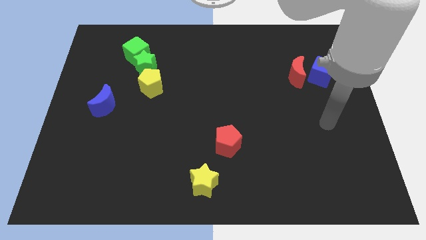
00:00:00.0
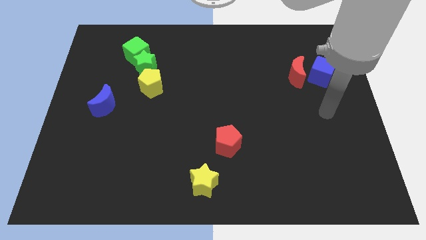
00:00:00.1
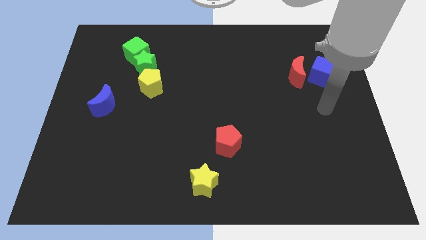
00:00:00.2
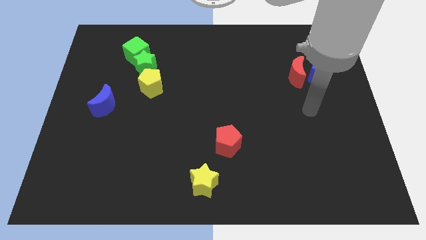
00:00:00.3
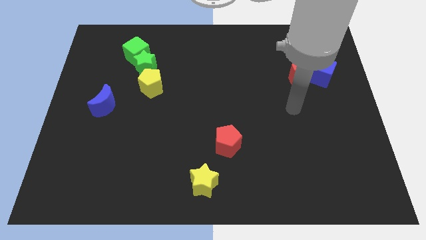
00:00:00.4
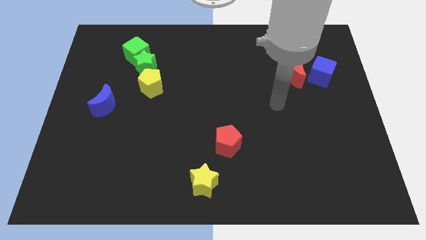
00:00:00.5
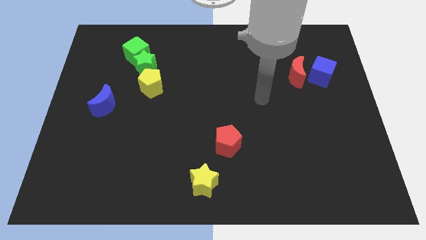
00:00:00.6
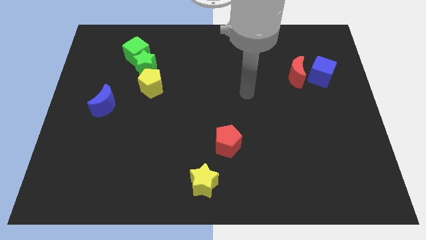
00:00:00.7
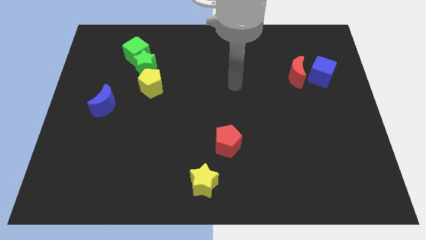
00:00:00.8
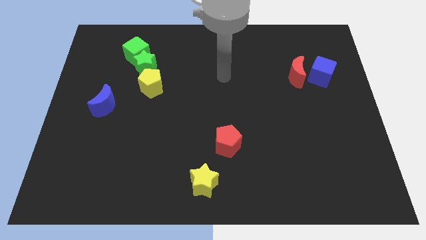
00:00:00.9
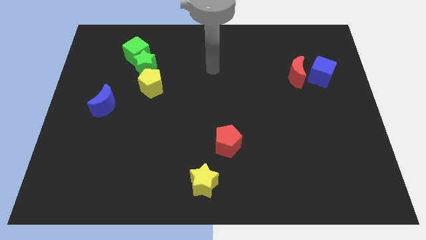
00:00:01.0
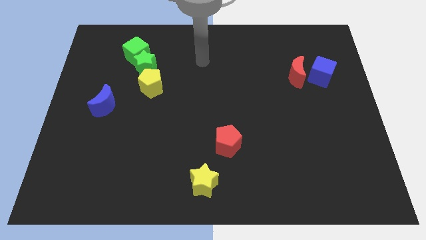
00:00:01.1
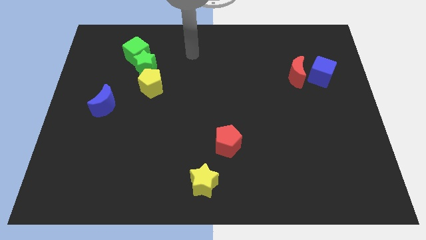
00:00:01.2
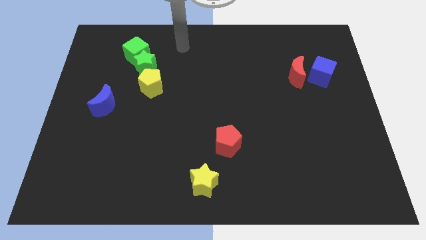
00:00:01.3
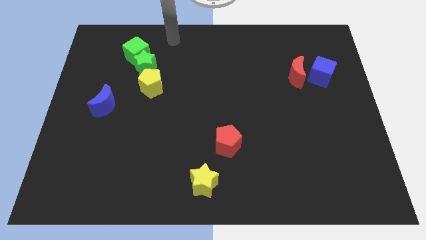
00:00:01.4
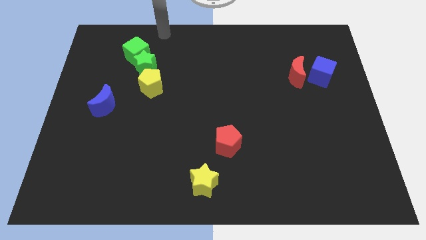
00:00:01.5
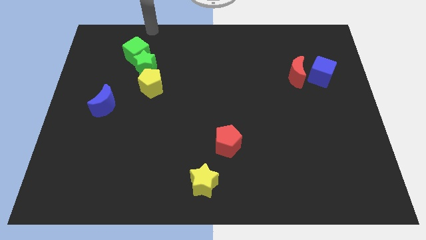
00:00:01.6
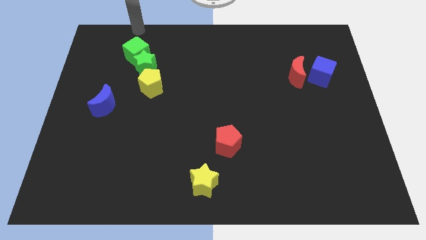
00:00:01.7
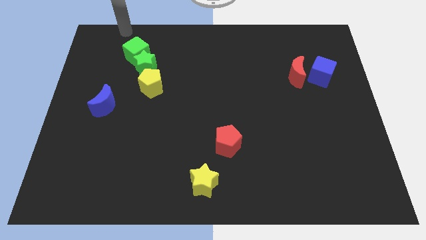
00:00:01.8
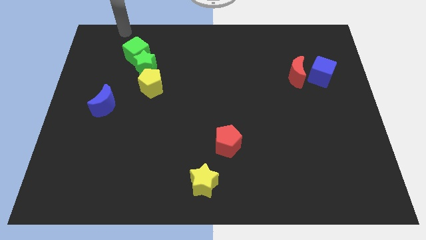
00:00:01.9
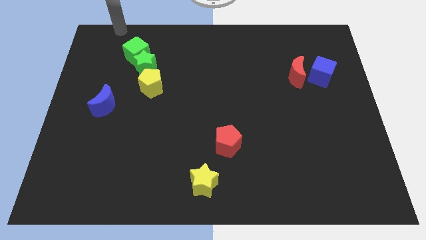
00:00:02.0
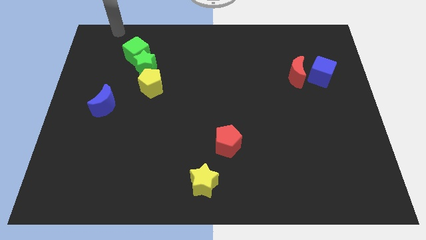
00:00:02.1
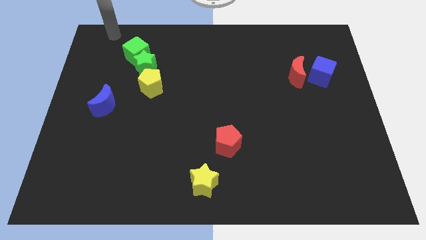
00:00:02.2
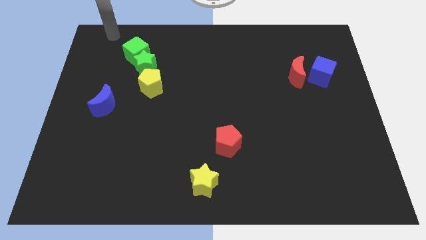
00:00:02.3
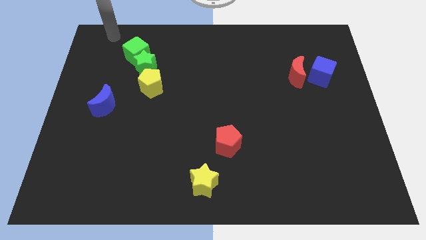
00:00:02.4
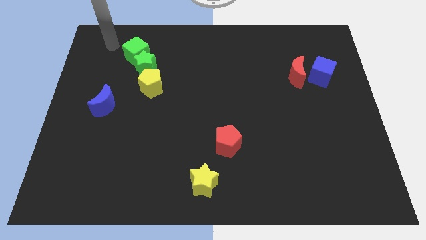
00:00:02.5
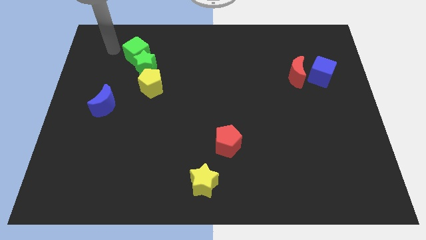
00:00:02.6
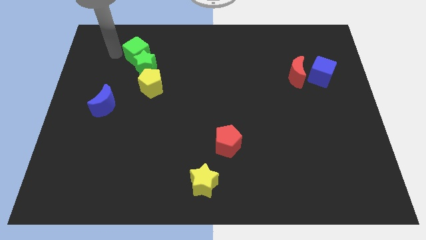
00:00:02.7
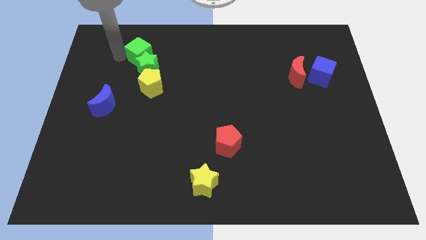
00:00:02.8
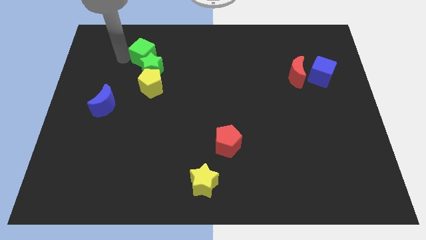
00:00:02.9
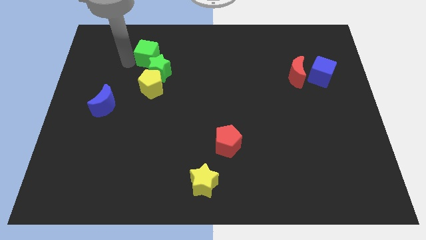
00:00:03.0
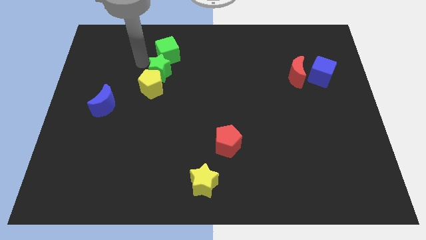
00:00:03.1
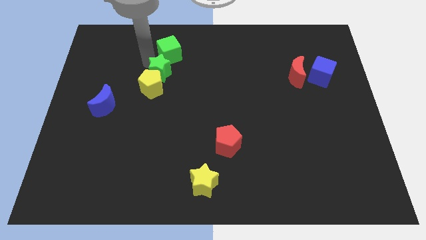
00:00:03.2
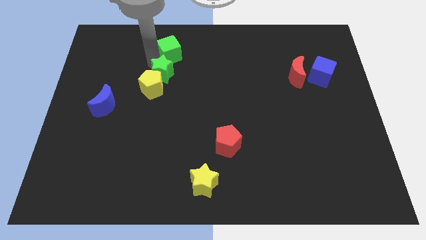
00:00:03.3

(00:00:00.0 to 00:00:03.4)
push both the green blocks to the top right side of the yellow pentagon

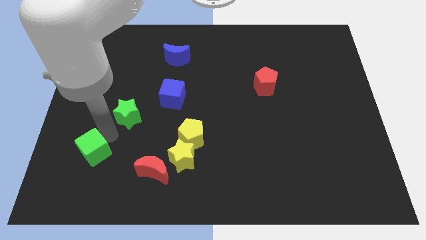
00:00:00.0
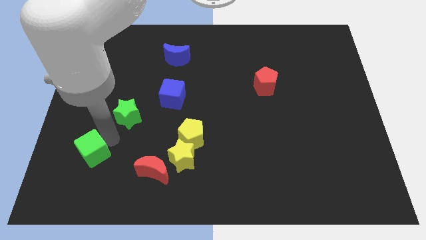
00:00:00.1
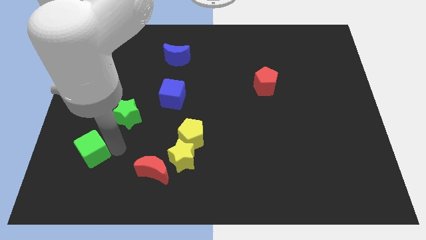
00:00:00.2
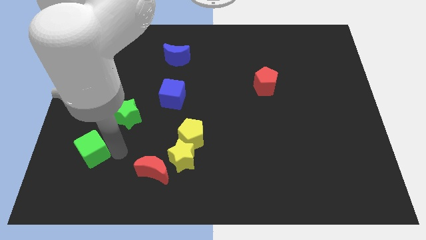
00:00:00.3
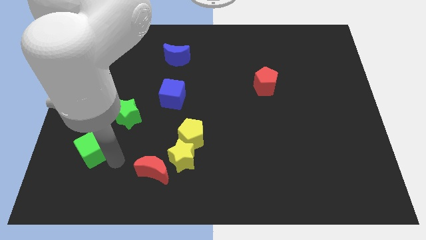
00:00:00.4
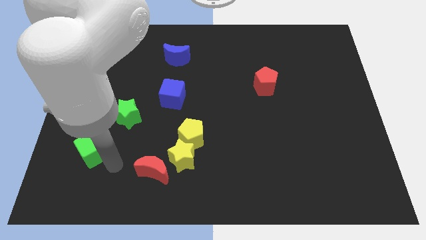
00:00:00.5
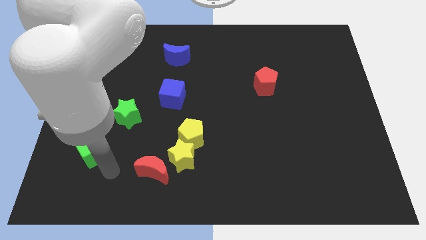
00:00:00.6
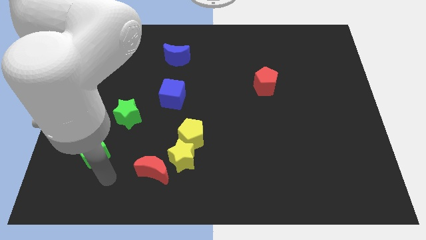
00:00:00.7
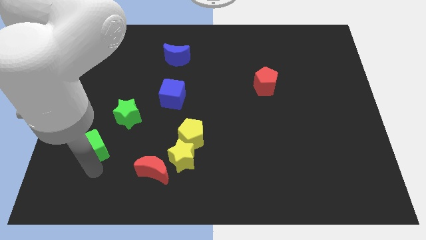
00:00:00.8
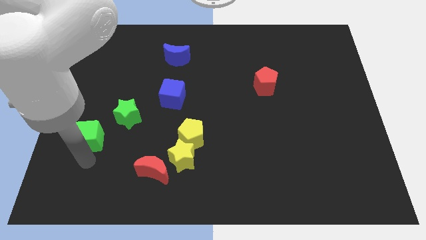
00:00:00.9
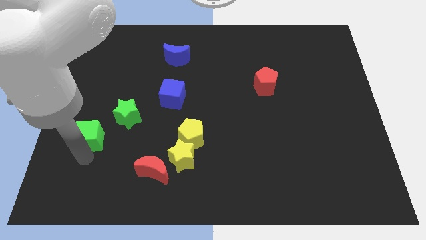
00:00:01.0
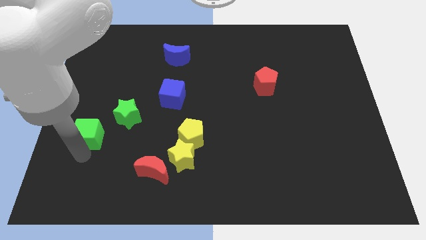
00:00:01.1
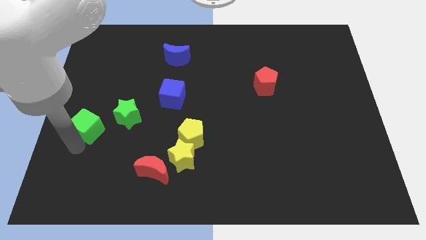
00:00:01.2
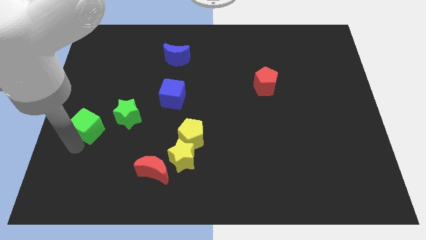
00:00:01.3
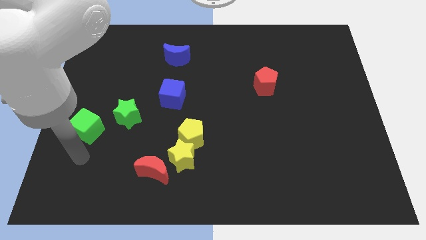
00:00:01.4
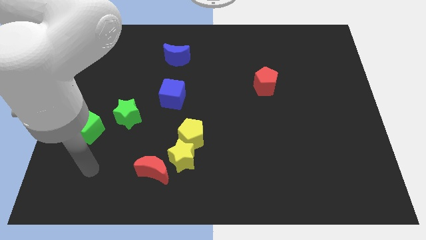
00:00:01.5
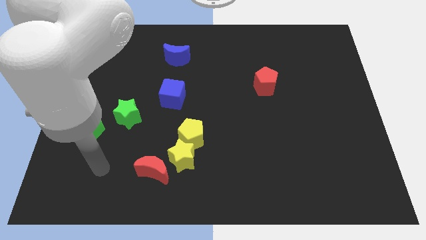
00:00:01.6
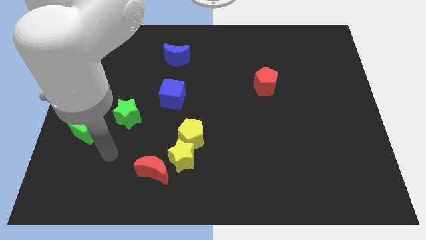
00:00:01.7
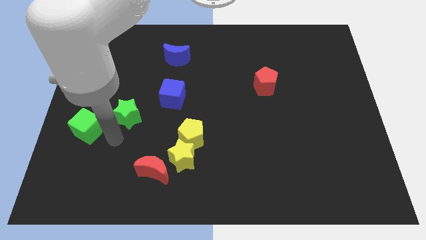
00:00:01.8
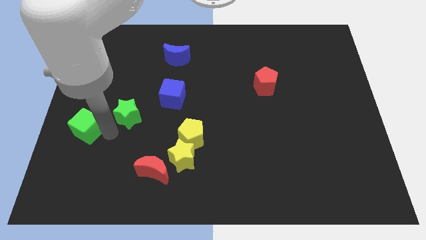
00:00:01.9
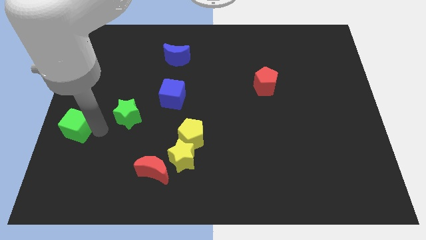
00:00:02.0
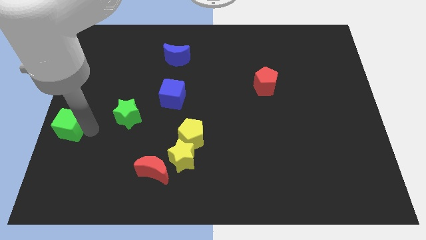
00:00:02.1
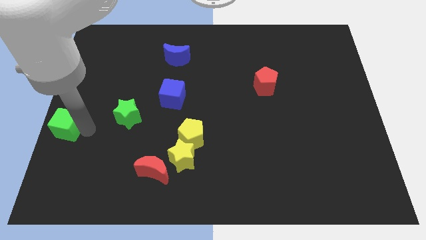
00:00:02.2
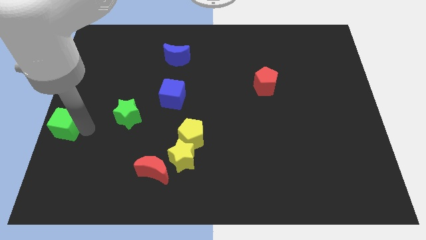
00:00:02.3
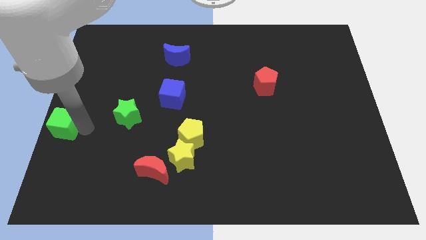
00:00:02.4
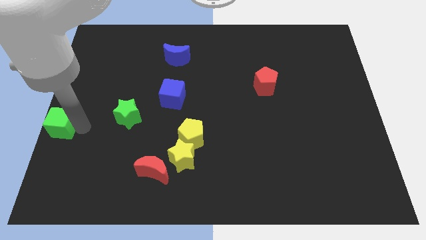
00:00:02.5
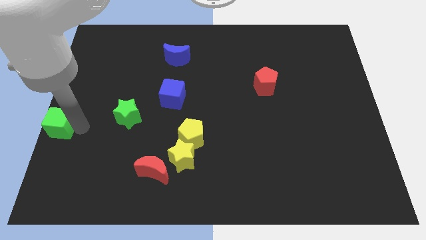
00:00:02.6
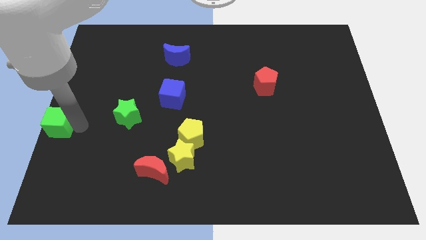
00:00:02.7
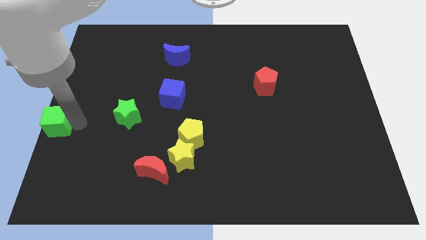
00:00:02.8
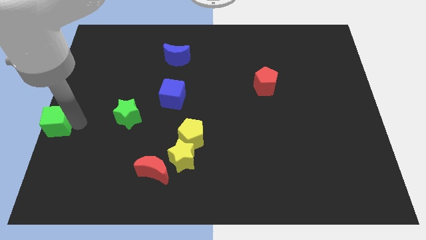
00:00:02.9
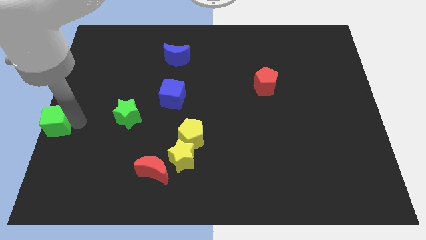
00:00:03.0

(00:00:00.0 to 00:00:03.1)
place the green cube at the center left of the board

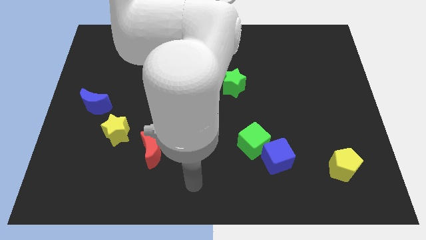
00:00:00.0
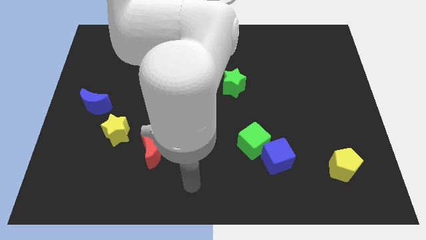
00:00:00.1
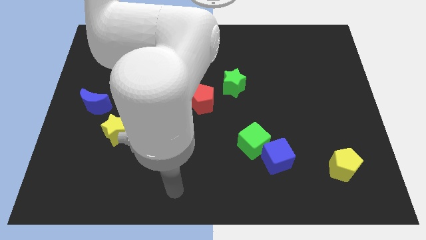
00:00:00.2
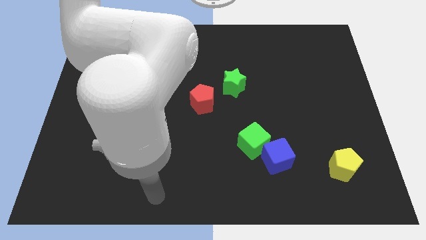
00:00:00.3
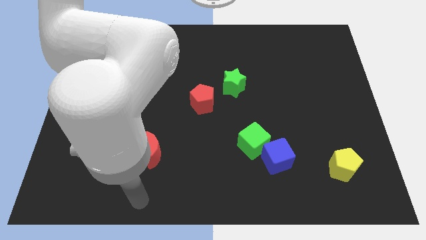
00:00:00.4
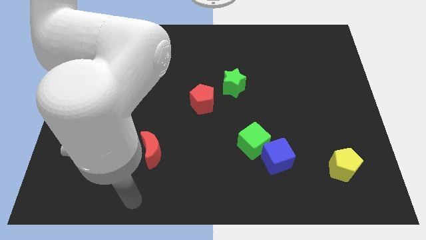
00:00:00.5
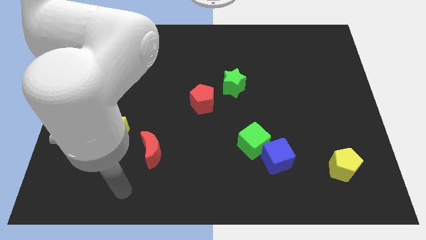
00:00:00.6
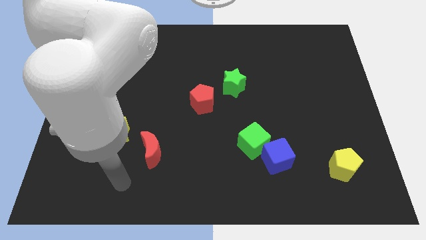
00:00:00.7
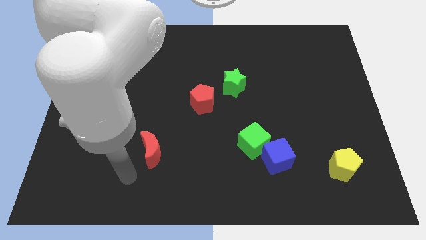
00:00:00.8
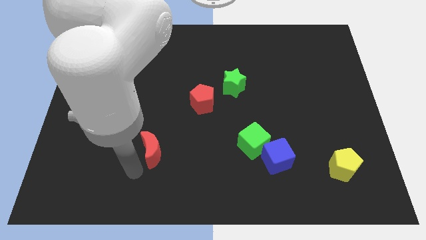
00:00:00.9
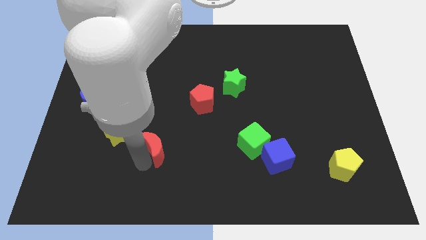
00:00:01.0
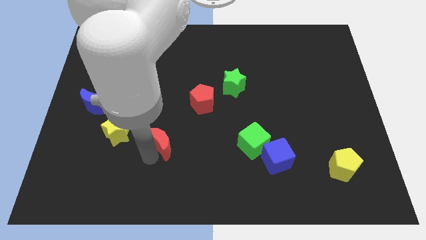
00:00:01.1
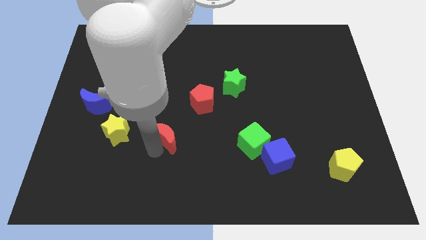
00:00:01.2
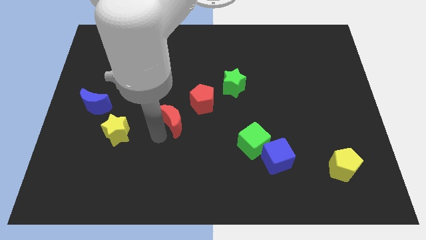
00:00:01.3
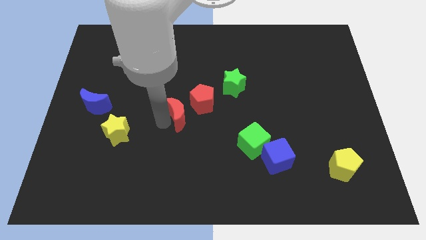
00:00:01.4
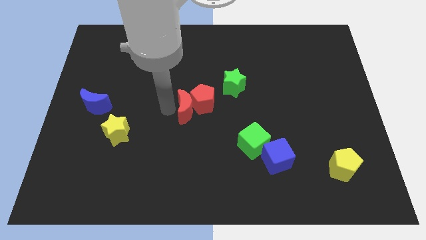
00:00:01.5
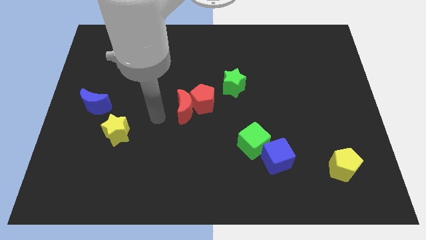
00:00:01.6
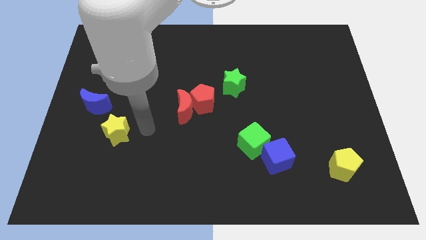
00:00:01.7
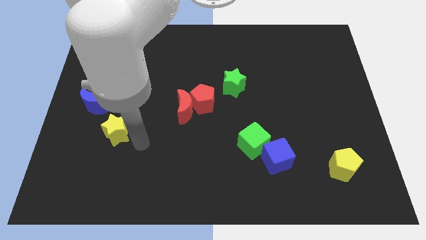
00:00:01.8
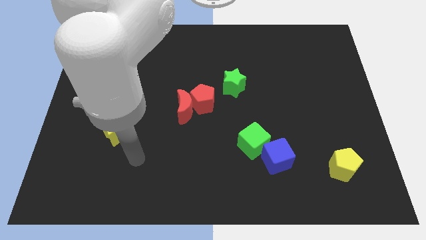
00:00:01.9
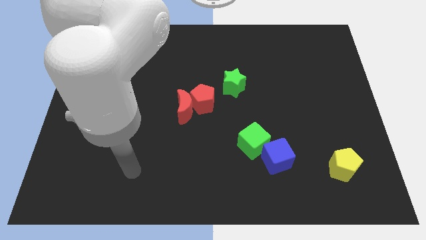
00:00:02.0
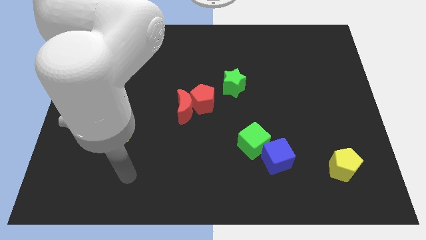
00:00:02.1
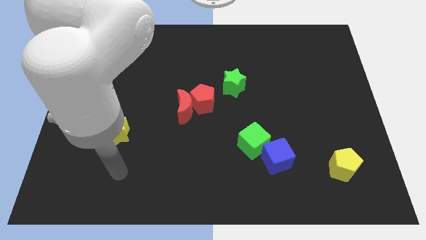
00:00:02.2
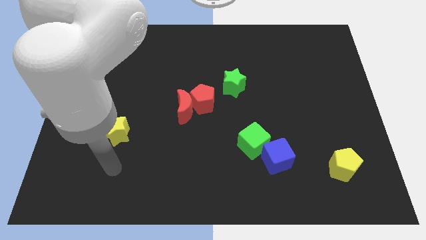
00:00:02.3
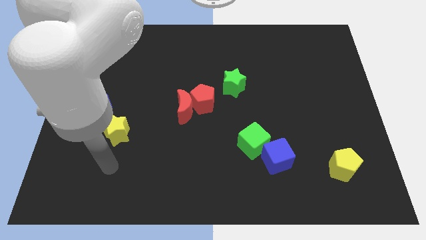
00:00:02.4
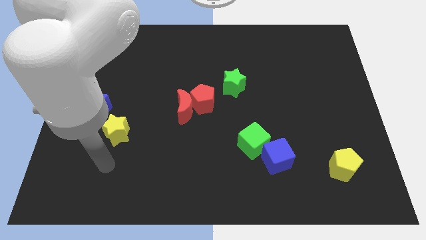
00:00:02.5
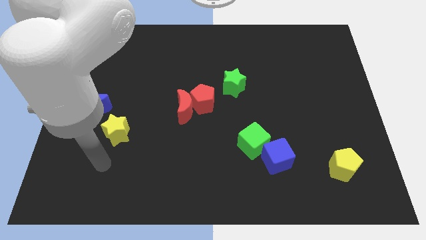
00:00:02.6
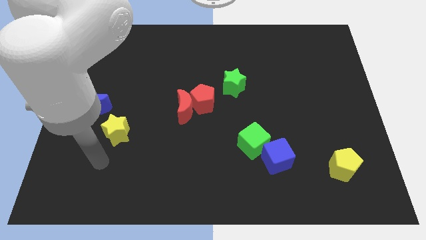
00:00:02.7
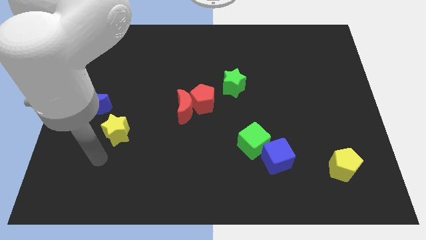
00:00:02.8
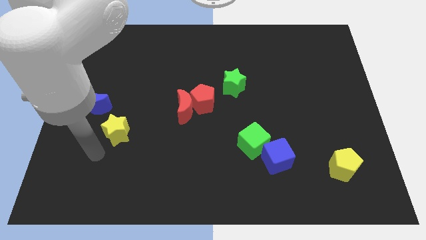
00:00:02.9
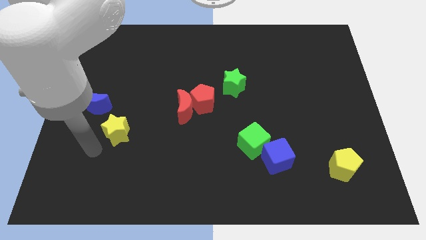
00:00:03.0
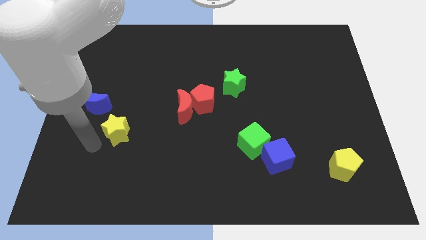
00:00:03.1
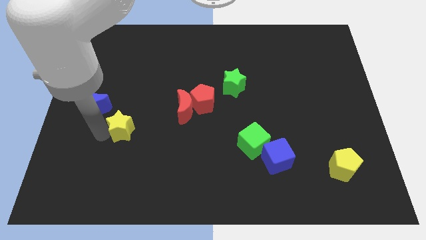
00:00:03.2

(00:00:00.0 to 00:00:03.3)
push the red moon in to the red pentagon
